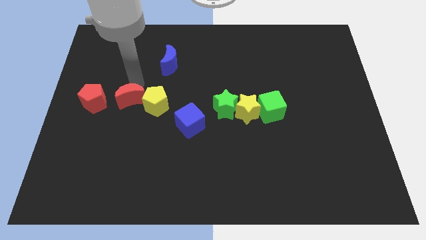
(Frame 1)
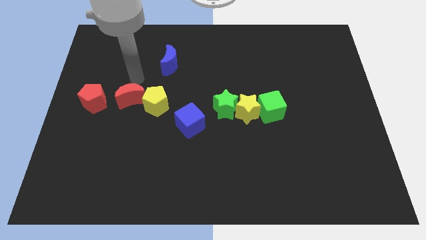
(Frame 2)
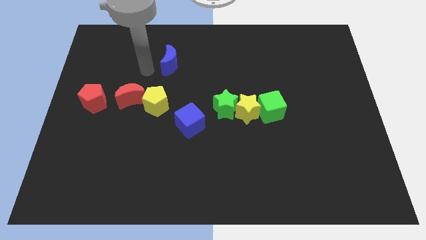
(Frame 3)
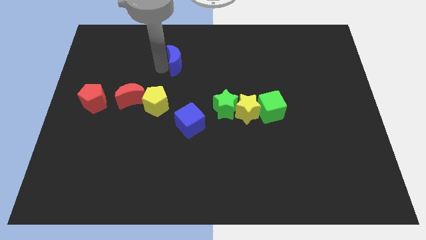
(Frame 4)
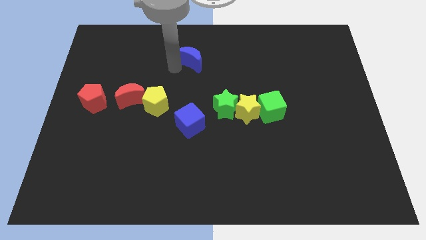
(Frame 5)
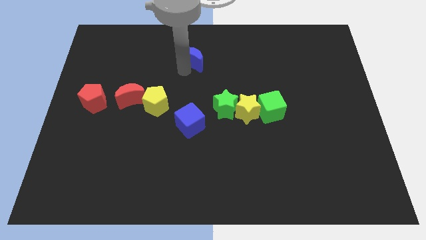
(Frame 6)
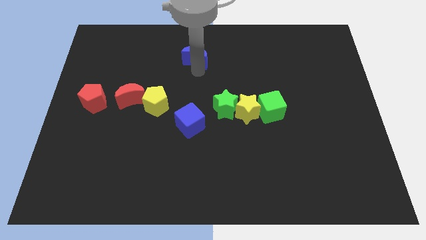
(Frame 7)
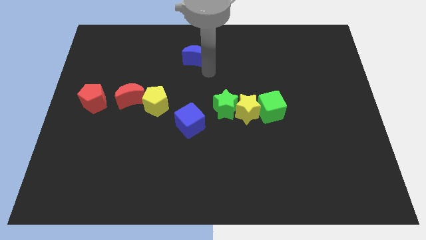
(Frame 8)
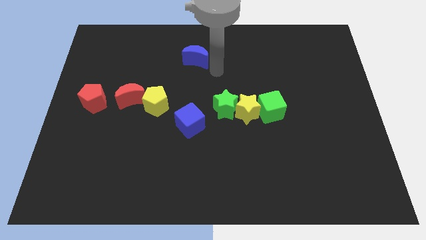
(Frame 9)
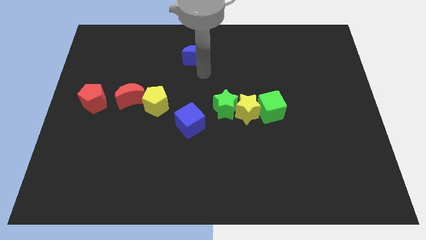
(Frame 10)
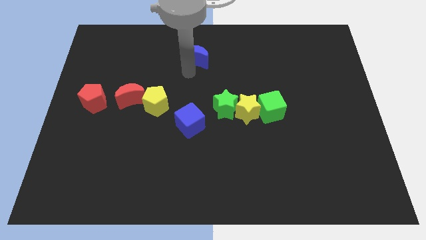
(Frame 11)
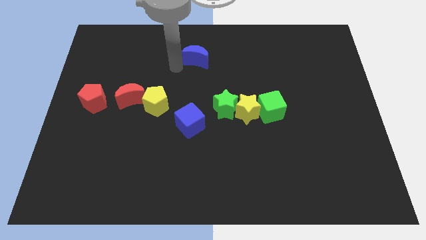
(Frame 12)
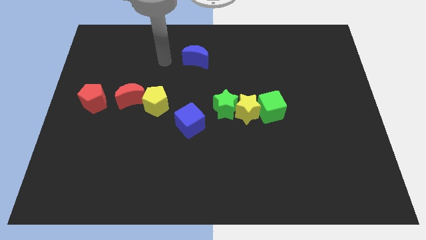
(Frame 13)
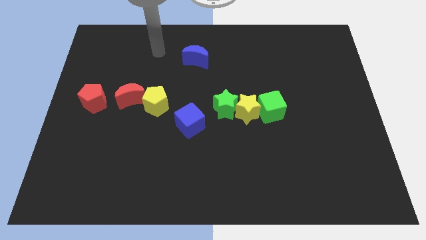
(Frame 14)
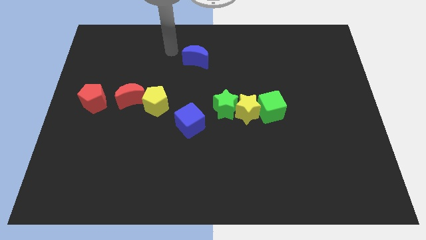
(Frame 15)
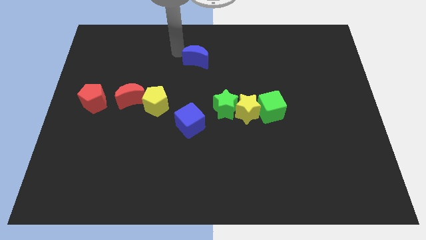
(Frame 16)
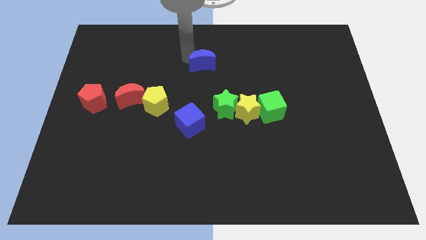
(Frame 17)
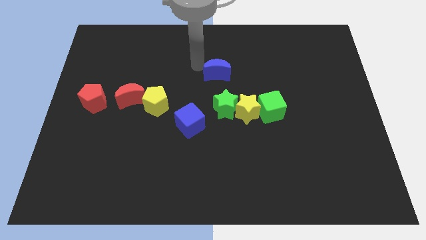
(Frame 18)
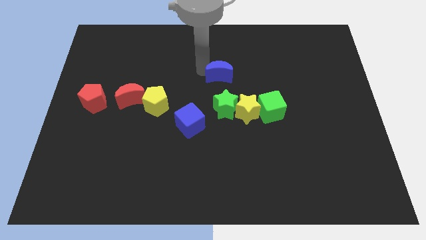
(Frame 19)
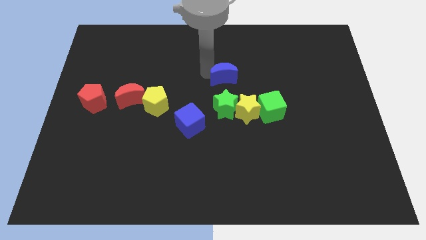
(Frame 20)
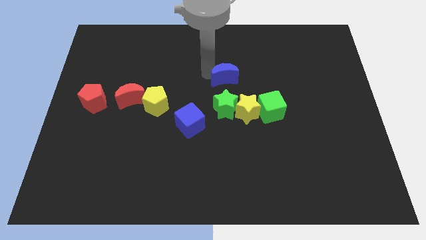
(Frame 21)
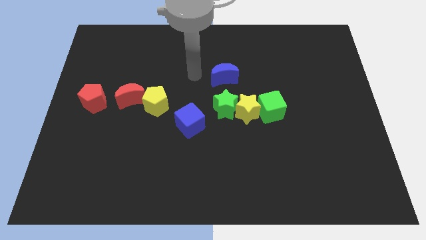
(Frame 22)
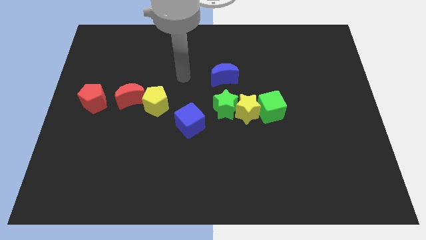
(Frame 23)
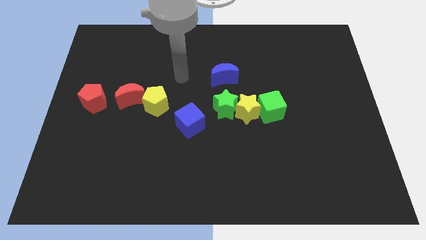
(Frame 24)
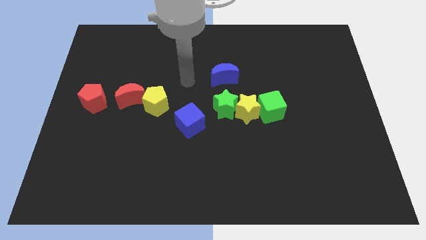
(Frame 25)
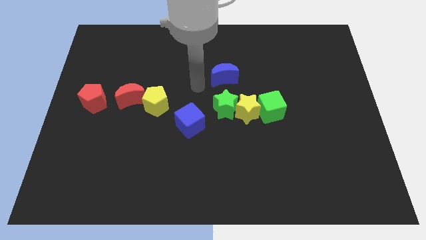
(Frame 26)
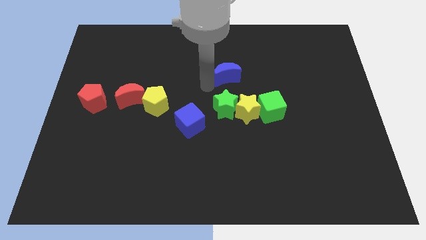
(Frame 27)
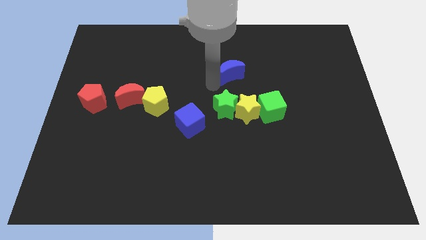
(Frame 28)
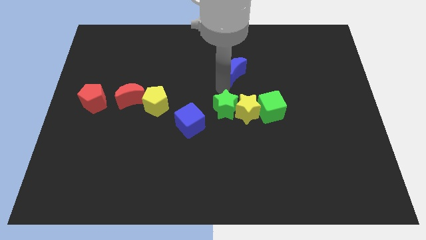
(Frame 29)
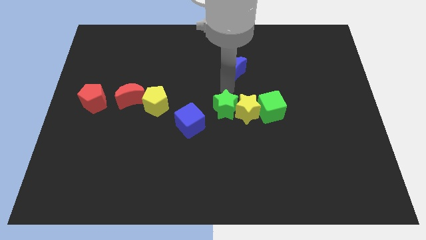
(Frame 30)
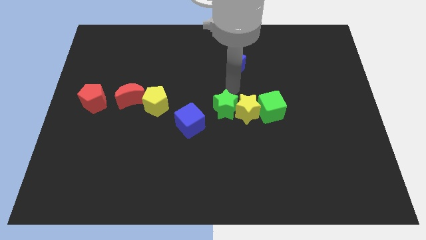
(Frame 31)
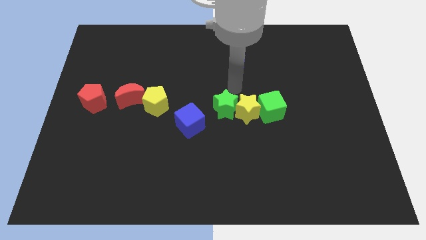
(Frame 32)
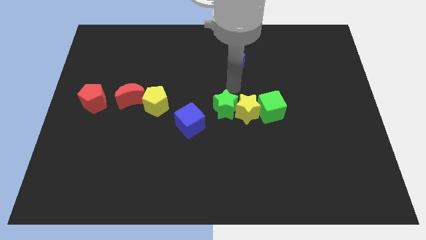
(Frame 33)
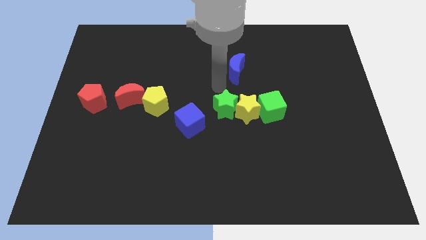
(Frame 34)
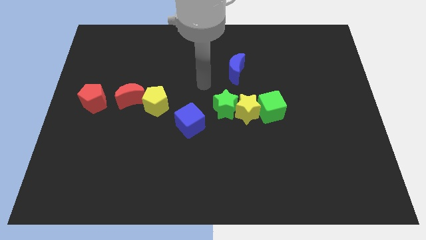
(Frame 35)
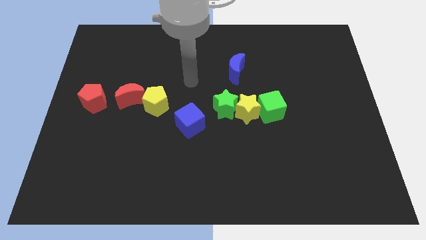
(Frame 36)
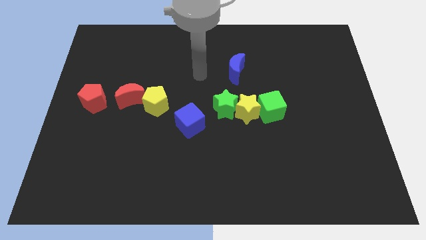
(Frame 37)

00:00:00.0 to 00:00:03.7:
place the blue crescent at the top right side of green star

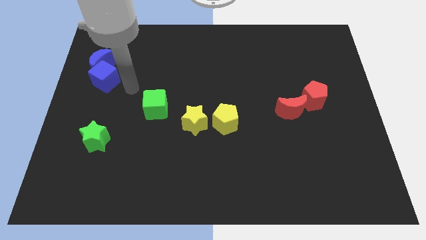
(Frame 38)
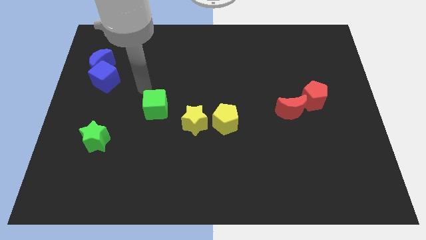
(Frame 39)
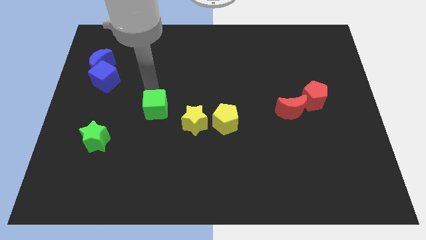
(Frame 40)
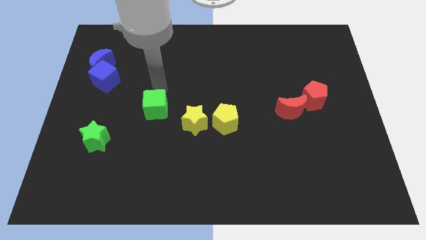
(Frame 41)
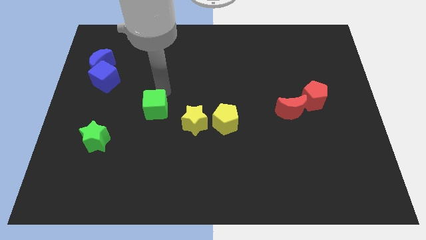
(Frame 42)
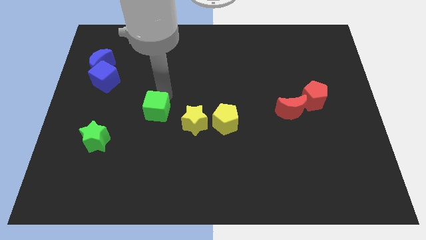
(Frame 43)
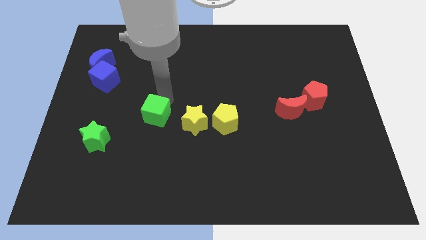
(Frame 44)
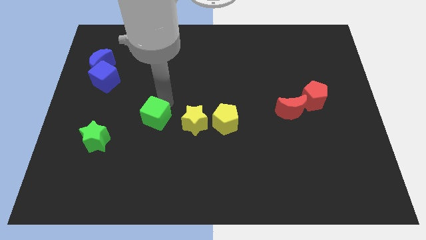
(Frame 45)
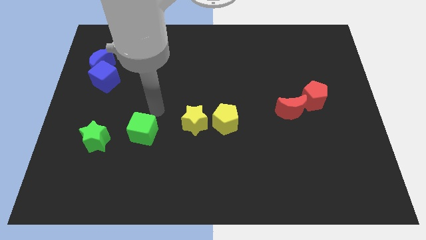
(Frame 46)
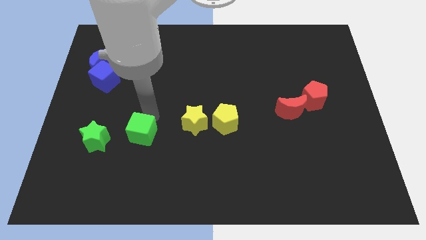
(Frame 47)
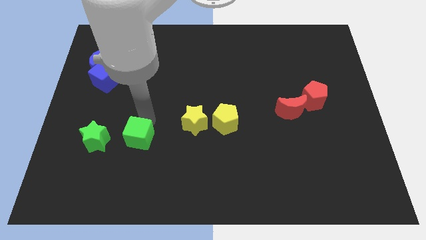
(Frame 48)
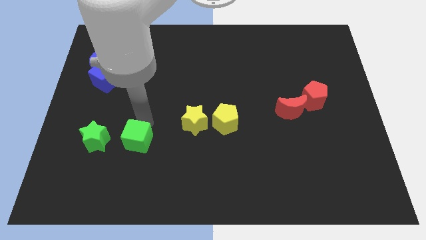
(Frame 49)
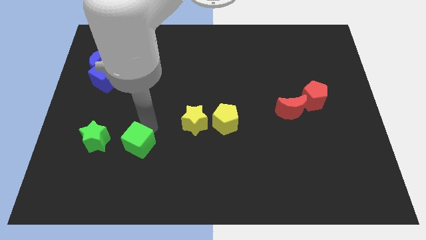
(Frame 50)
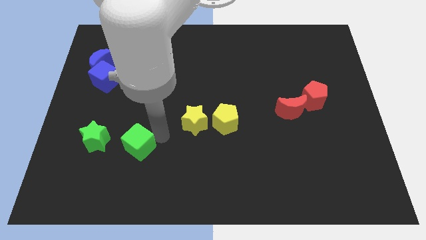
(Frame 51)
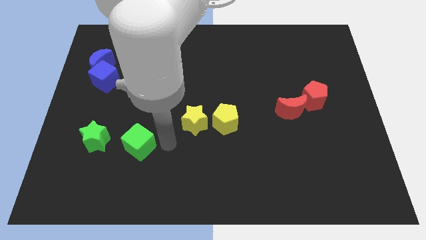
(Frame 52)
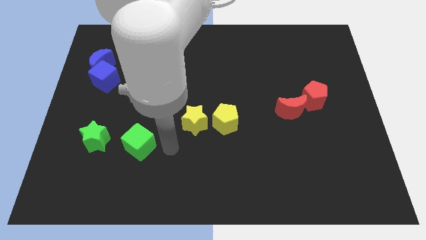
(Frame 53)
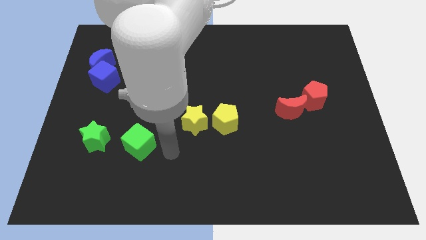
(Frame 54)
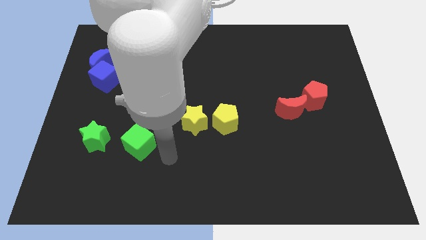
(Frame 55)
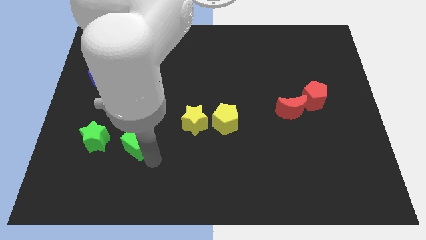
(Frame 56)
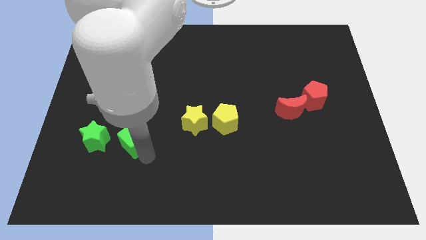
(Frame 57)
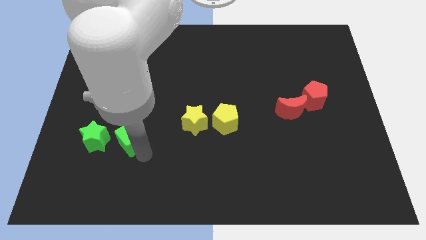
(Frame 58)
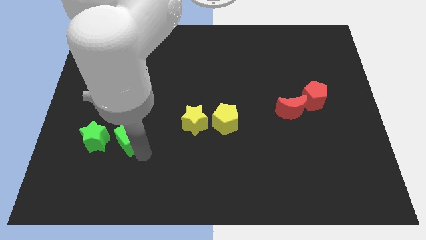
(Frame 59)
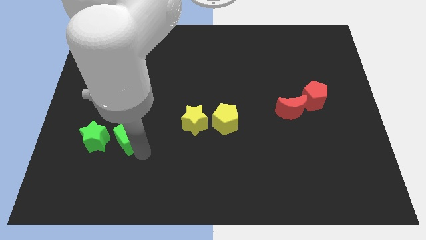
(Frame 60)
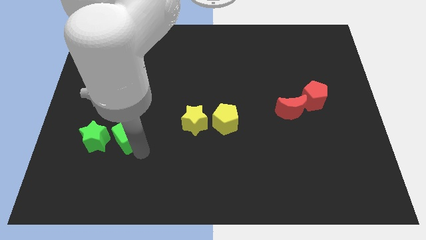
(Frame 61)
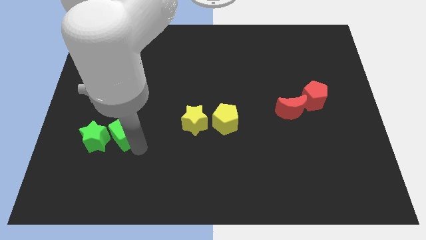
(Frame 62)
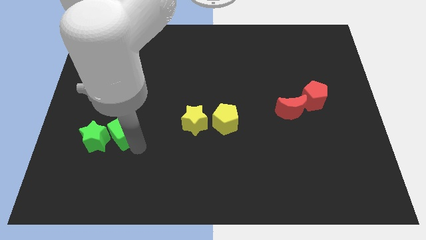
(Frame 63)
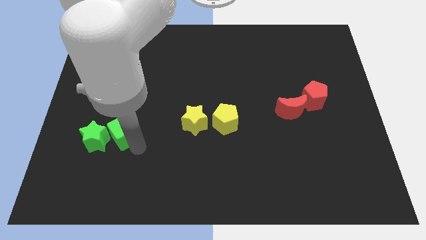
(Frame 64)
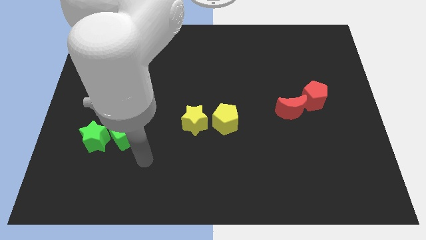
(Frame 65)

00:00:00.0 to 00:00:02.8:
move the green cube to the right of the green star

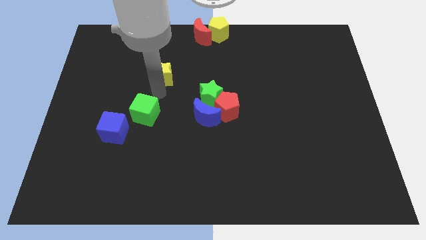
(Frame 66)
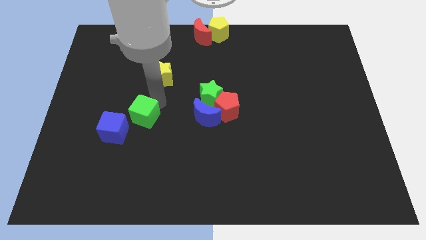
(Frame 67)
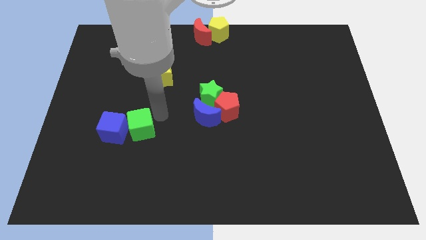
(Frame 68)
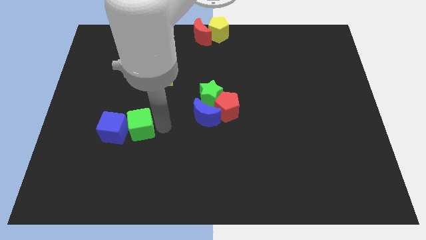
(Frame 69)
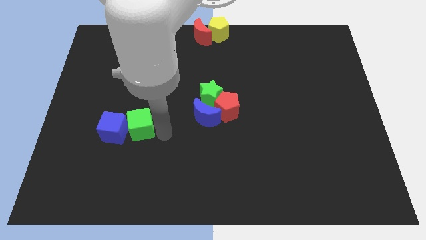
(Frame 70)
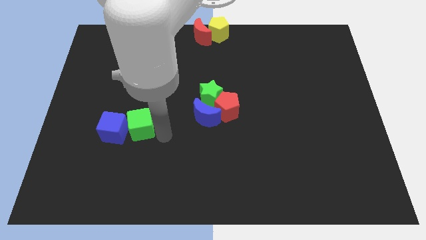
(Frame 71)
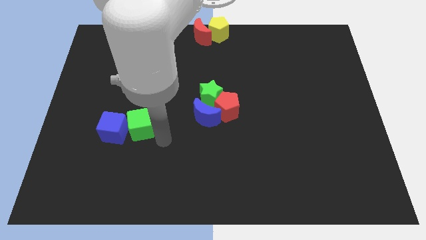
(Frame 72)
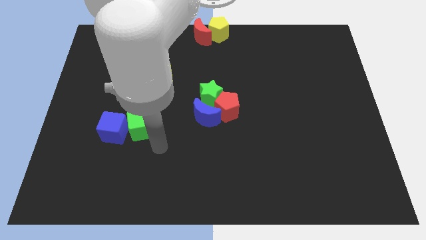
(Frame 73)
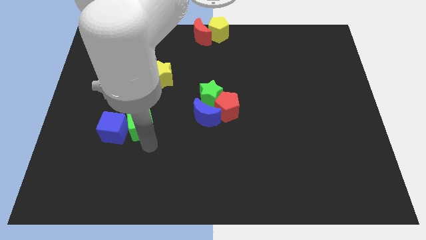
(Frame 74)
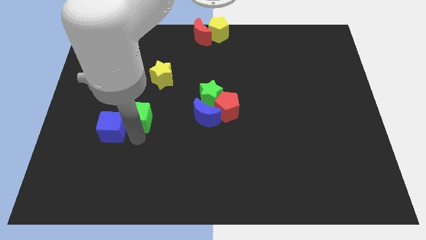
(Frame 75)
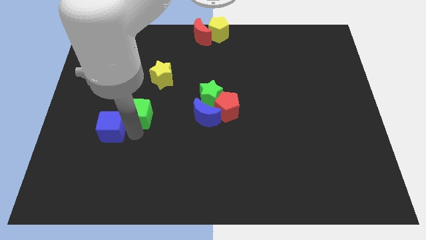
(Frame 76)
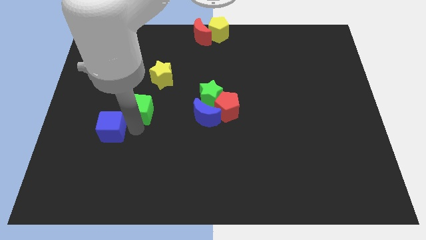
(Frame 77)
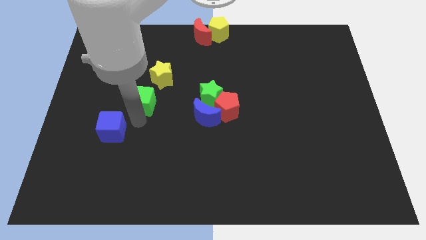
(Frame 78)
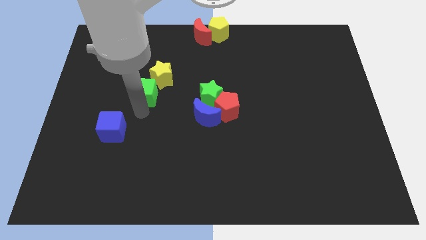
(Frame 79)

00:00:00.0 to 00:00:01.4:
move your arm away from the yellow star

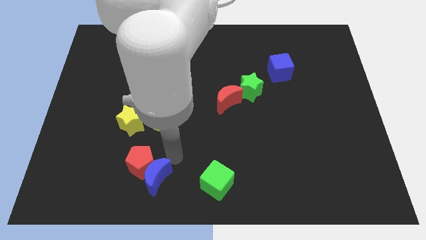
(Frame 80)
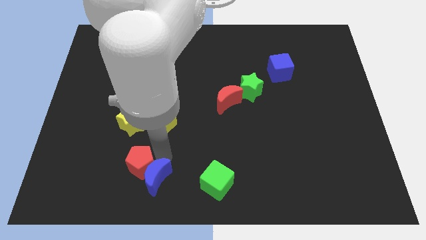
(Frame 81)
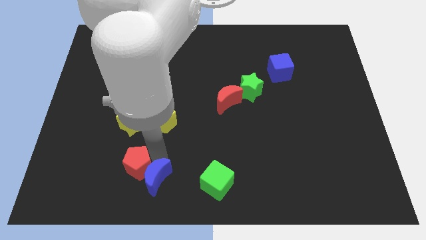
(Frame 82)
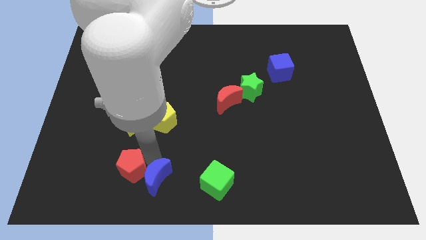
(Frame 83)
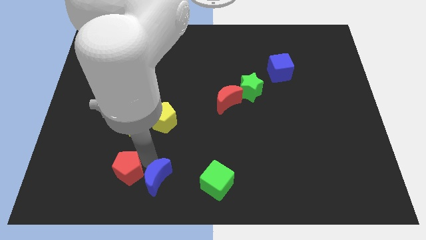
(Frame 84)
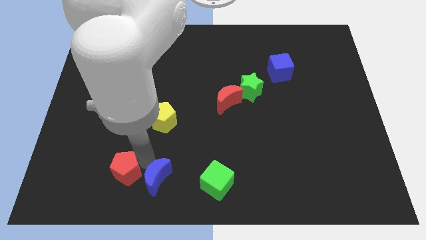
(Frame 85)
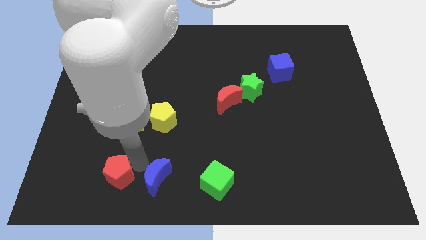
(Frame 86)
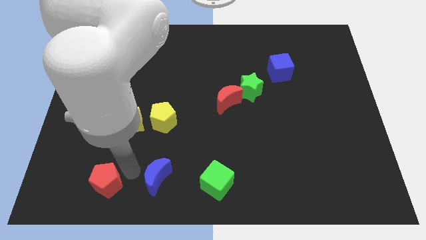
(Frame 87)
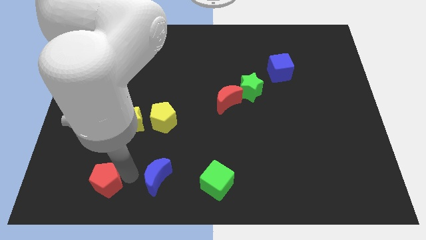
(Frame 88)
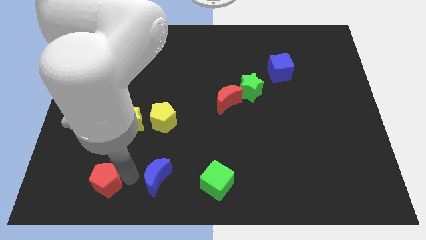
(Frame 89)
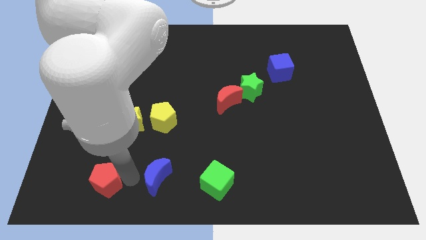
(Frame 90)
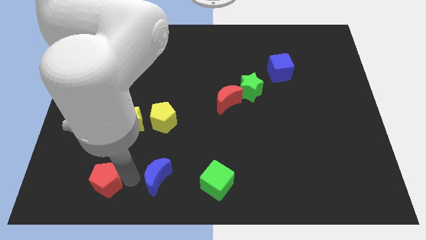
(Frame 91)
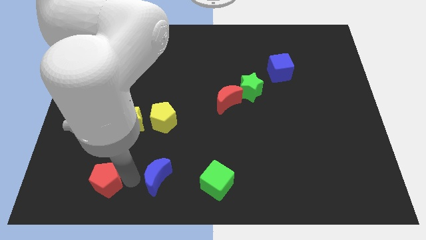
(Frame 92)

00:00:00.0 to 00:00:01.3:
separate the red pentagon from the blue crescent

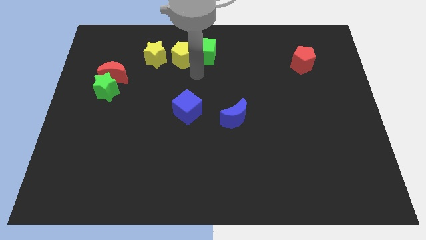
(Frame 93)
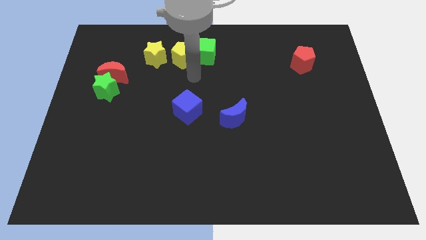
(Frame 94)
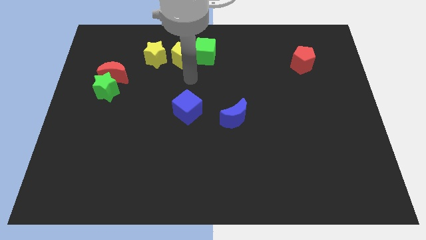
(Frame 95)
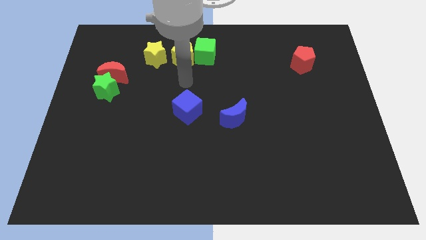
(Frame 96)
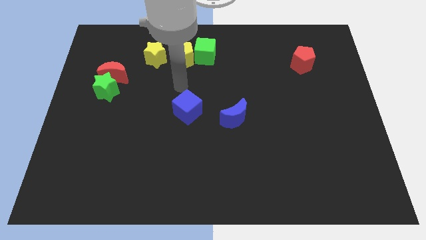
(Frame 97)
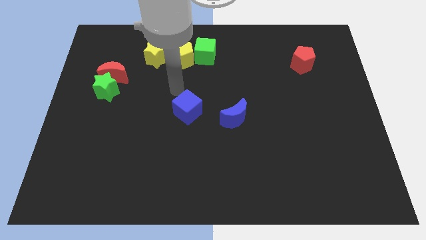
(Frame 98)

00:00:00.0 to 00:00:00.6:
place arm above blue cube
